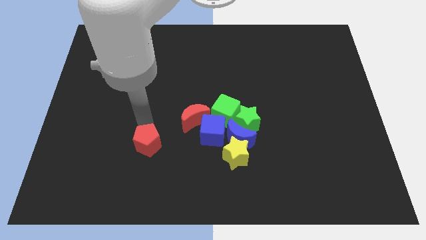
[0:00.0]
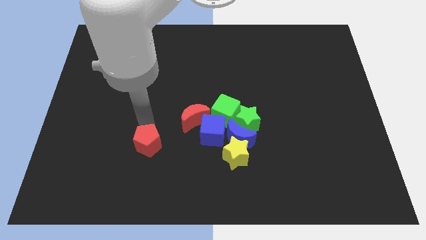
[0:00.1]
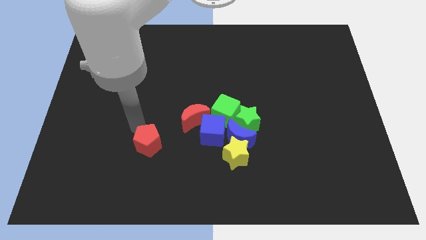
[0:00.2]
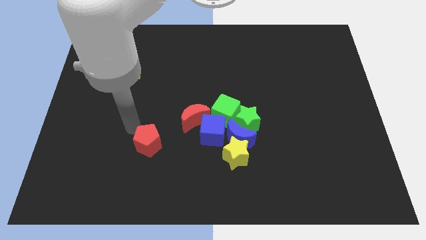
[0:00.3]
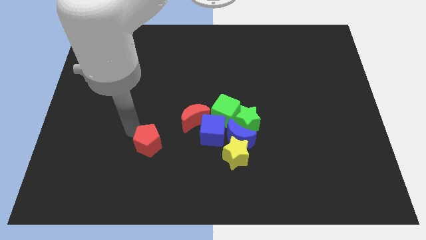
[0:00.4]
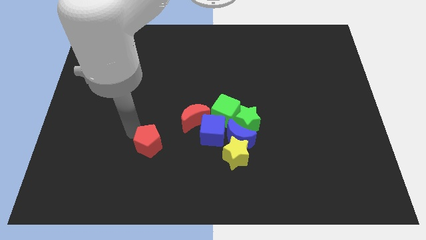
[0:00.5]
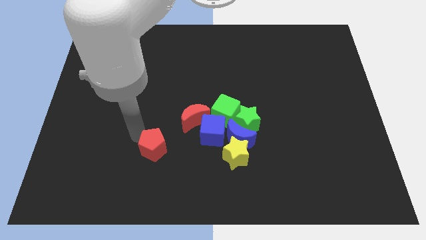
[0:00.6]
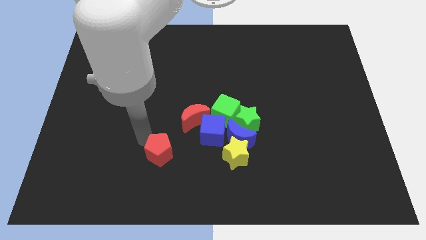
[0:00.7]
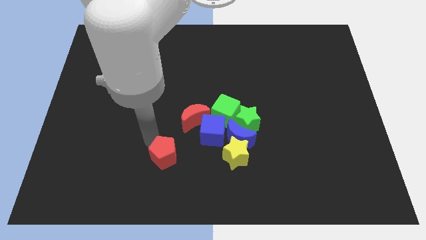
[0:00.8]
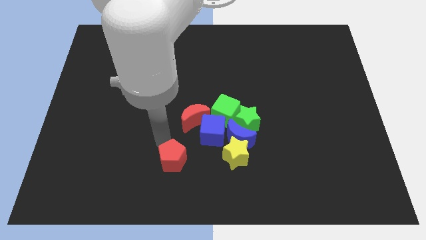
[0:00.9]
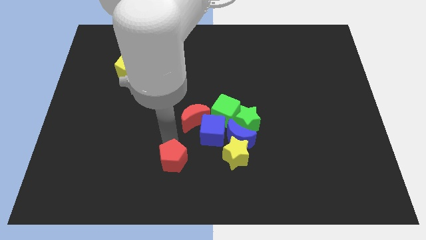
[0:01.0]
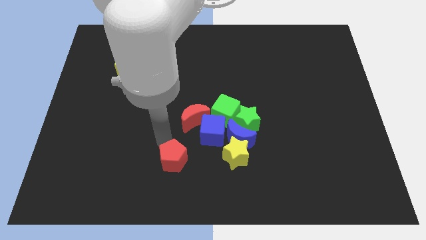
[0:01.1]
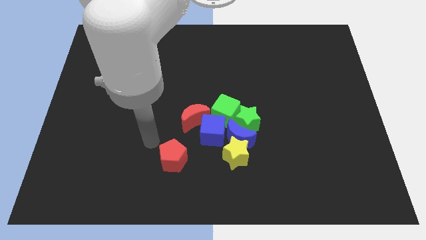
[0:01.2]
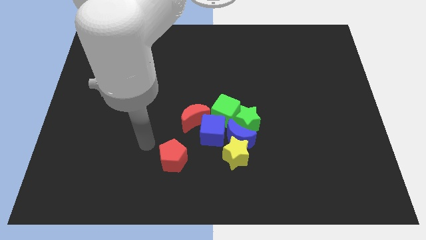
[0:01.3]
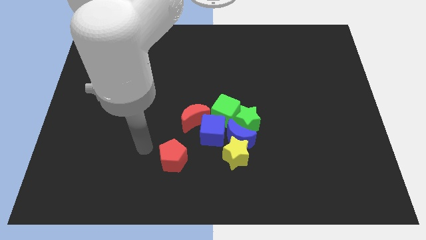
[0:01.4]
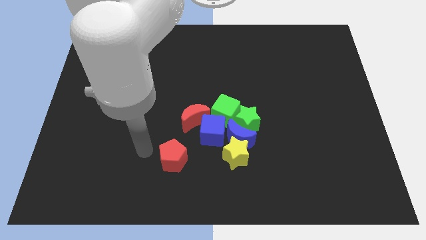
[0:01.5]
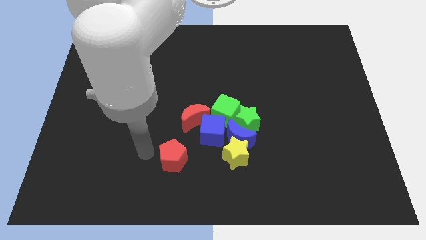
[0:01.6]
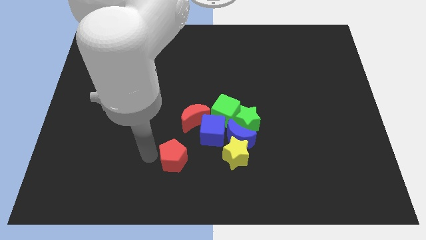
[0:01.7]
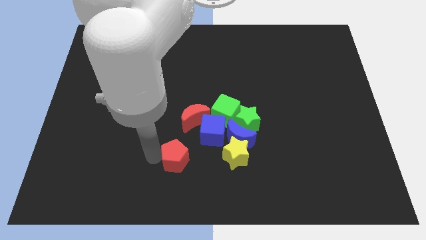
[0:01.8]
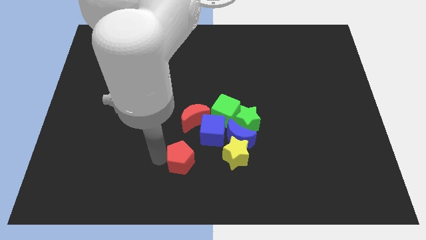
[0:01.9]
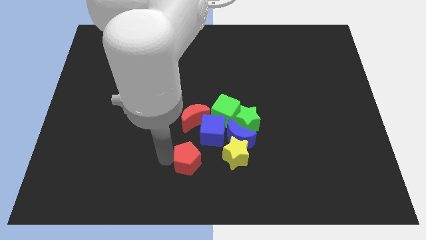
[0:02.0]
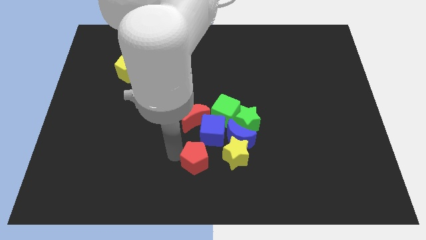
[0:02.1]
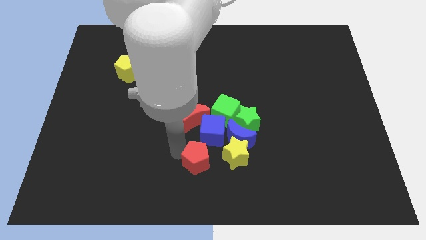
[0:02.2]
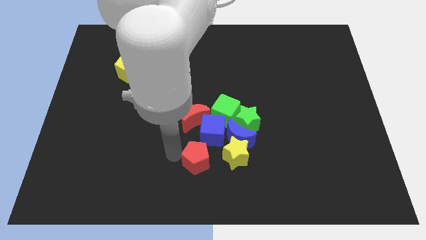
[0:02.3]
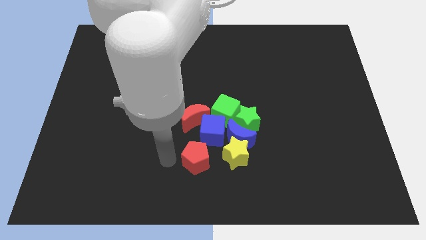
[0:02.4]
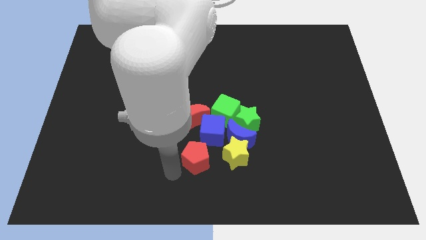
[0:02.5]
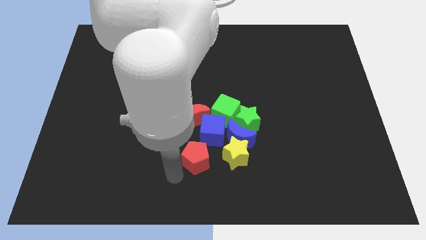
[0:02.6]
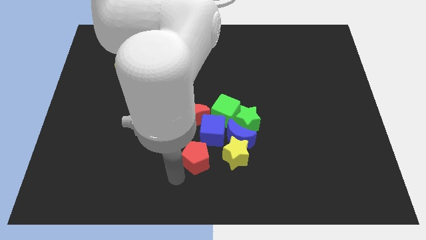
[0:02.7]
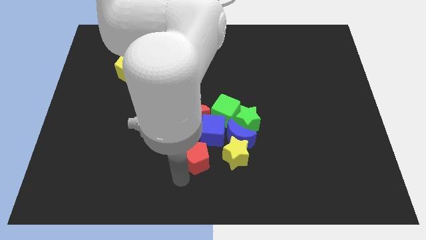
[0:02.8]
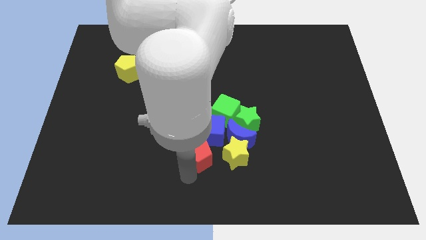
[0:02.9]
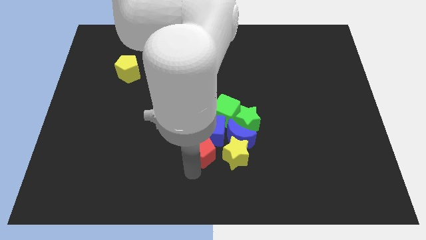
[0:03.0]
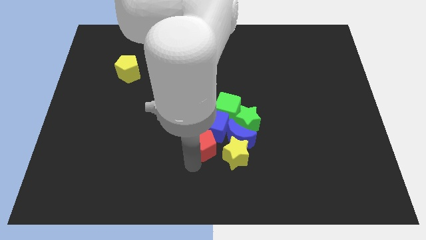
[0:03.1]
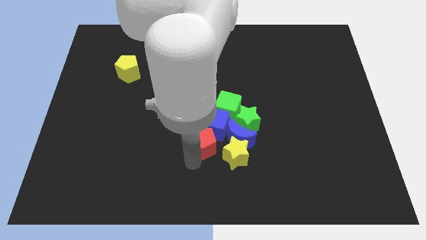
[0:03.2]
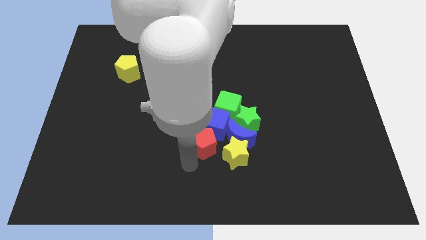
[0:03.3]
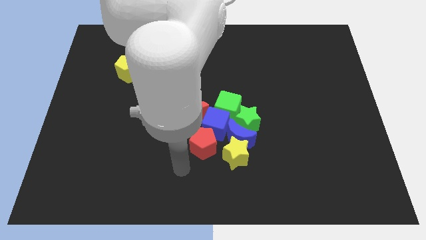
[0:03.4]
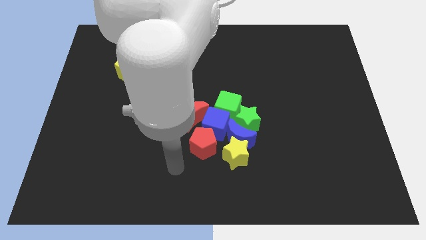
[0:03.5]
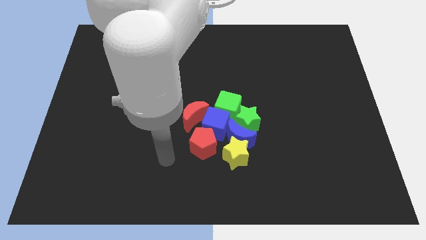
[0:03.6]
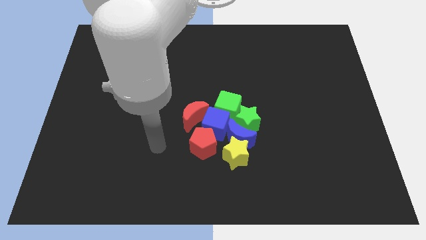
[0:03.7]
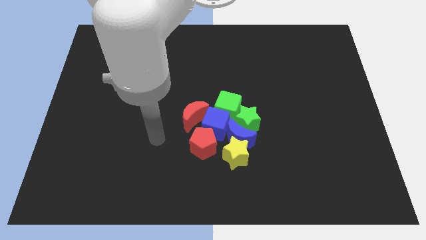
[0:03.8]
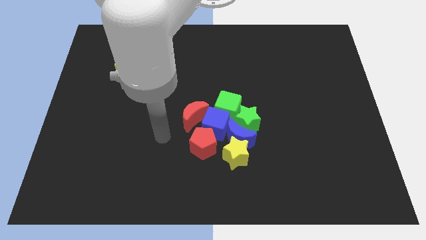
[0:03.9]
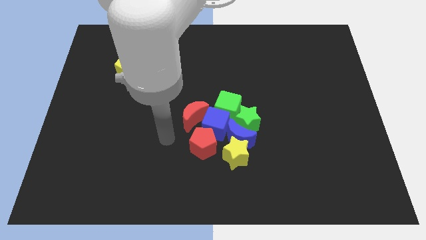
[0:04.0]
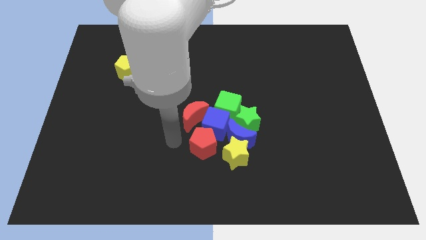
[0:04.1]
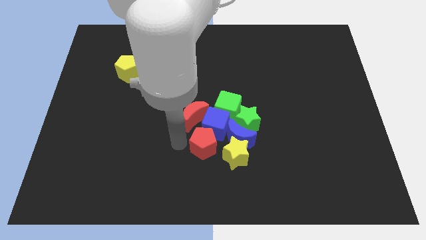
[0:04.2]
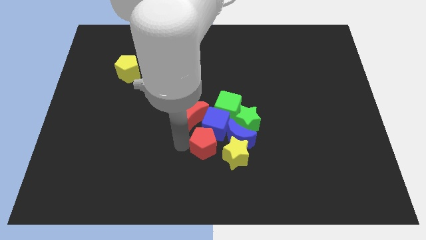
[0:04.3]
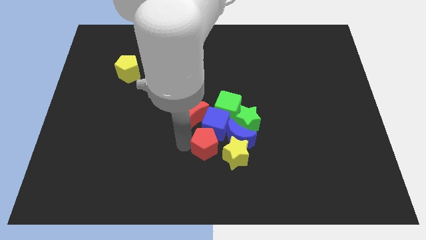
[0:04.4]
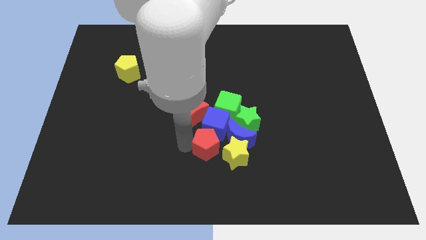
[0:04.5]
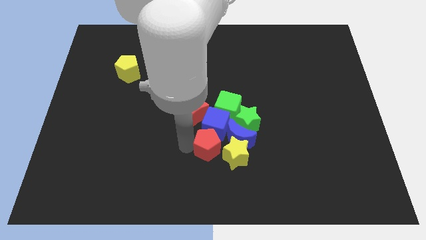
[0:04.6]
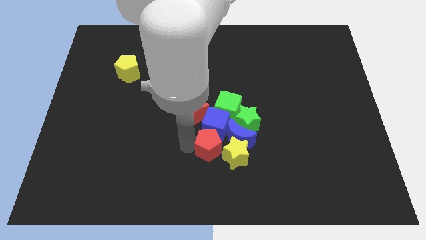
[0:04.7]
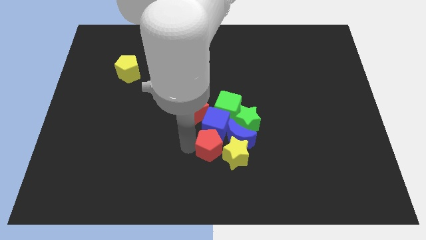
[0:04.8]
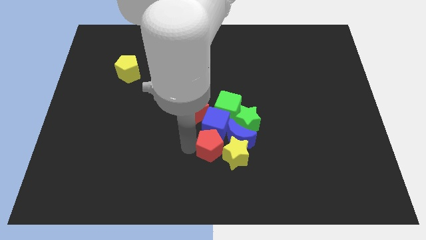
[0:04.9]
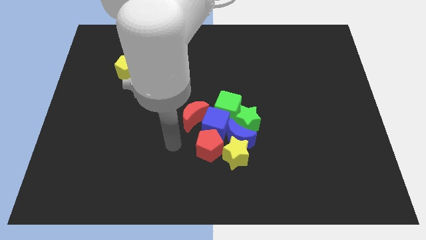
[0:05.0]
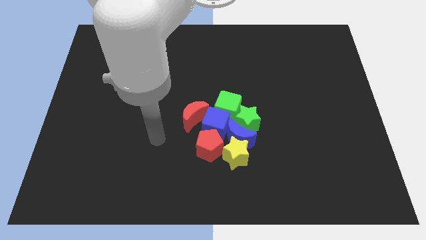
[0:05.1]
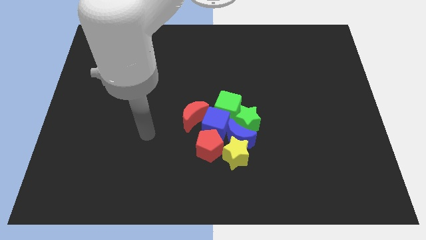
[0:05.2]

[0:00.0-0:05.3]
push the red pentagon left of the yellow star

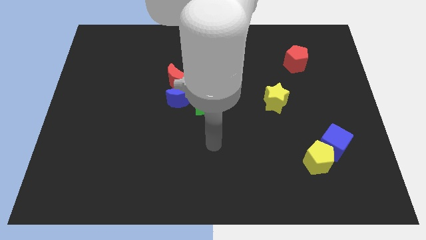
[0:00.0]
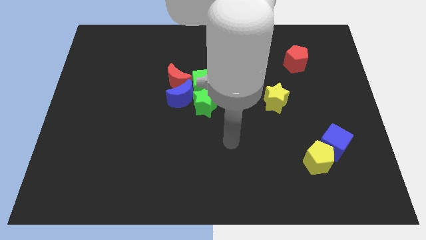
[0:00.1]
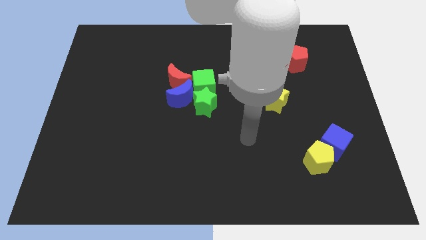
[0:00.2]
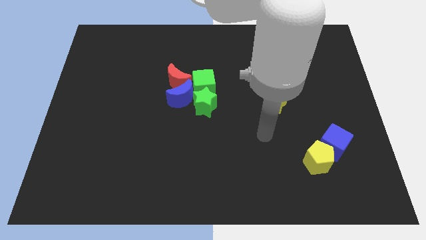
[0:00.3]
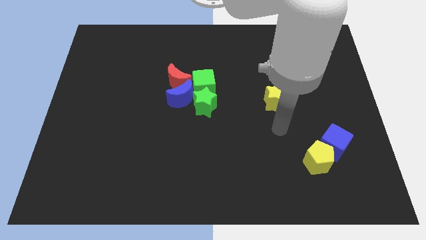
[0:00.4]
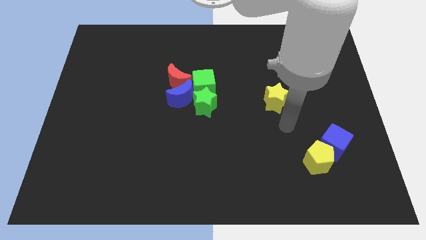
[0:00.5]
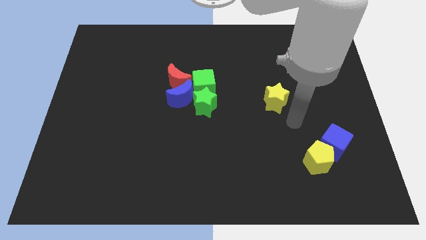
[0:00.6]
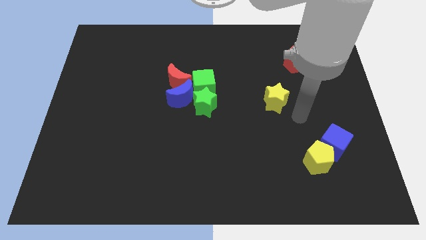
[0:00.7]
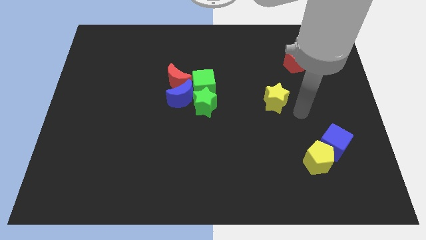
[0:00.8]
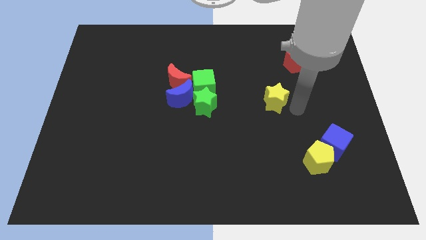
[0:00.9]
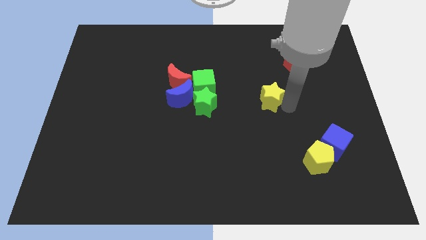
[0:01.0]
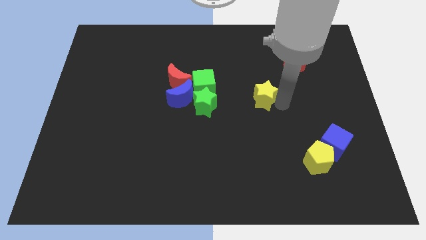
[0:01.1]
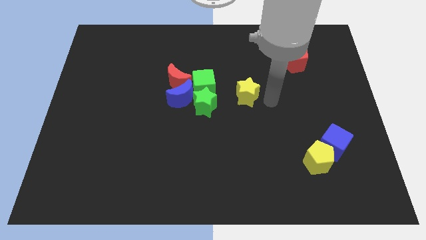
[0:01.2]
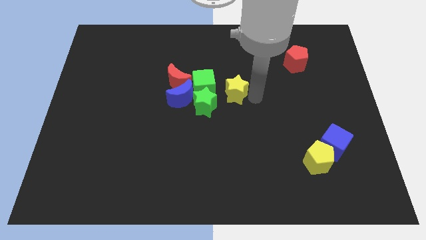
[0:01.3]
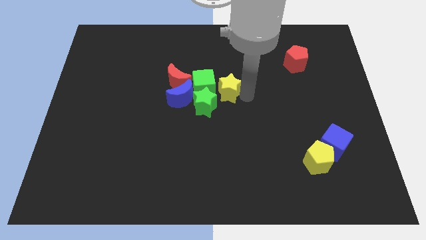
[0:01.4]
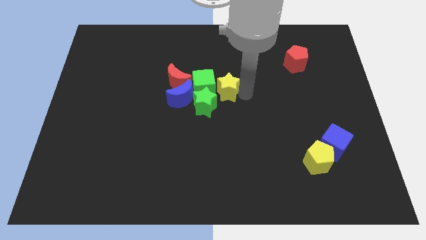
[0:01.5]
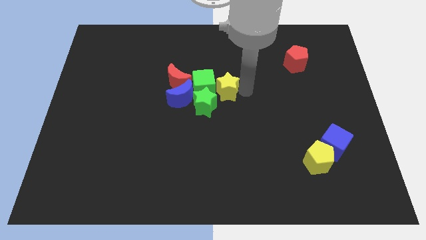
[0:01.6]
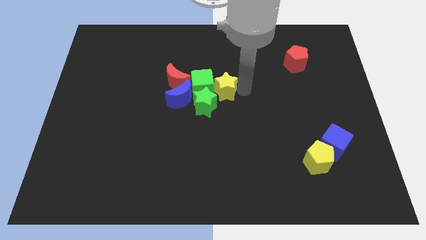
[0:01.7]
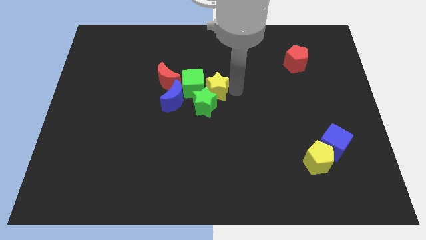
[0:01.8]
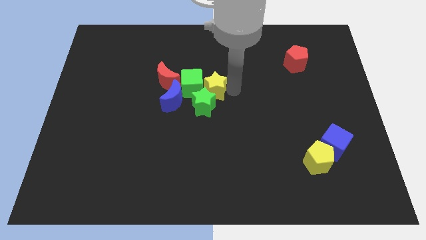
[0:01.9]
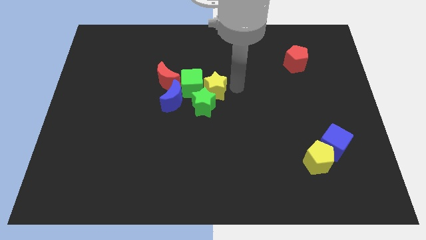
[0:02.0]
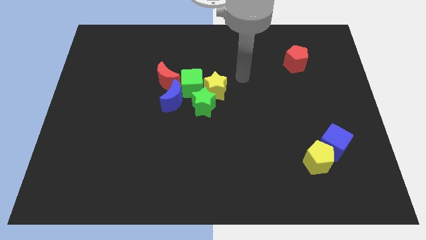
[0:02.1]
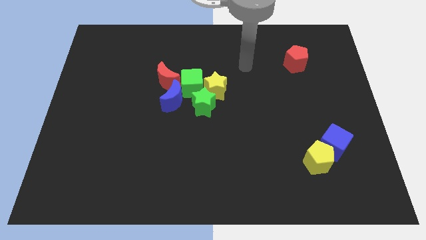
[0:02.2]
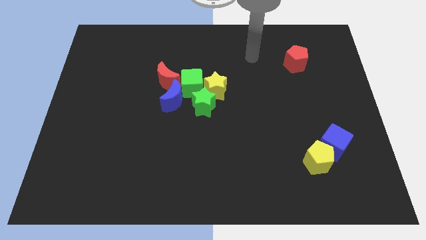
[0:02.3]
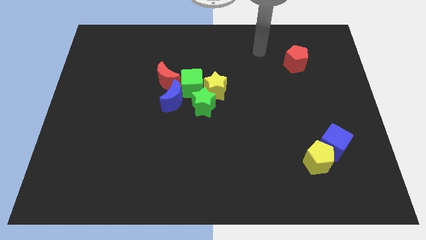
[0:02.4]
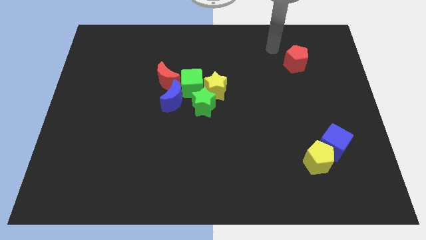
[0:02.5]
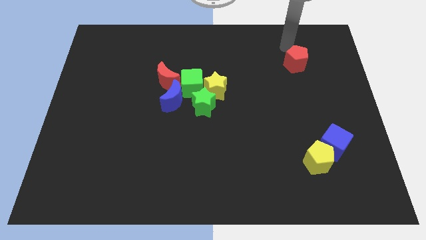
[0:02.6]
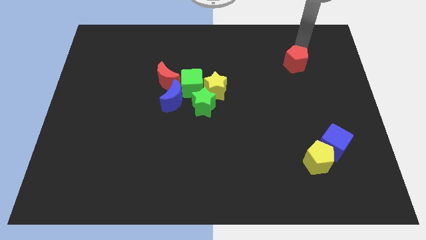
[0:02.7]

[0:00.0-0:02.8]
move the yellow star to the top right of the green star

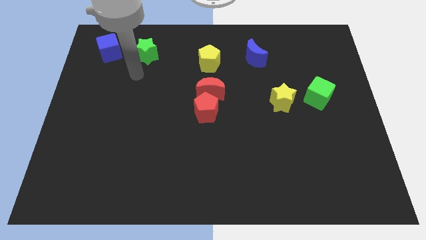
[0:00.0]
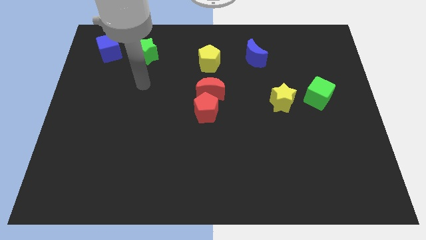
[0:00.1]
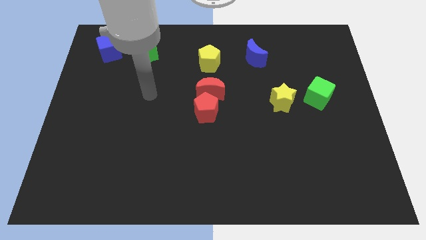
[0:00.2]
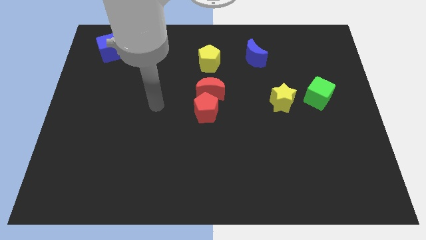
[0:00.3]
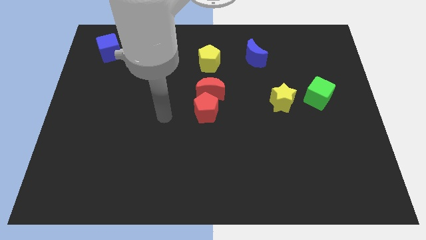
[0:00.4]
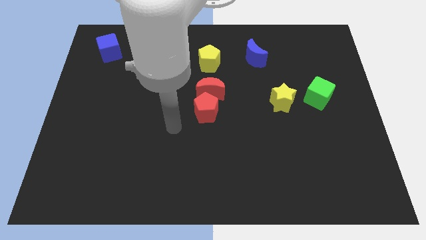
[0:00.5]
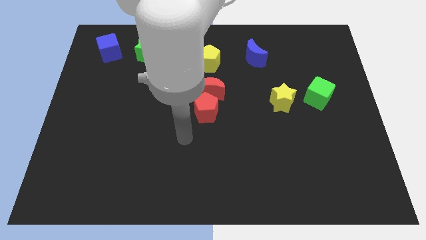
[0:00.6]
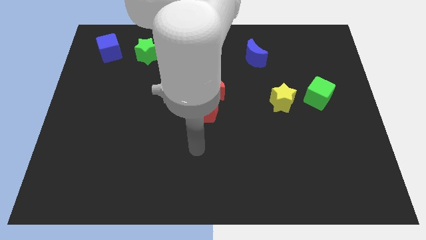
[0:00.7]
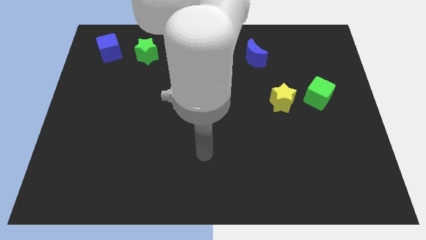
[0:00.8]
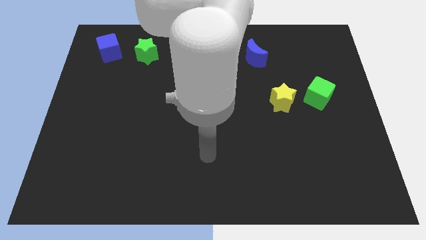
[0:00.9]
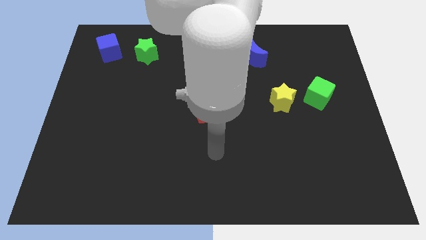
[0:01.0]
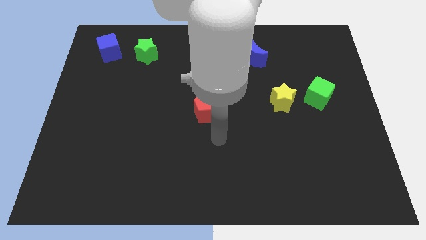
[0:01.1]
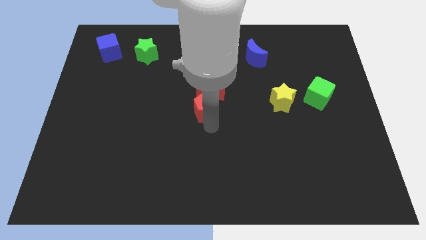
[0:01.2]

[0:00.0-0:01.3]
move the arm down to the red pentagon
